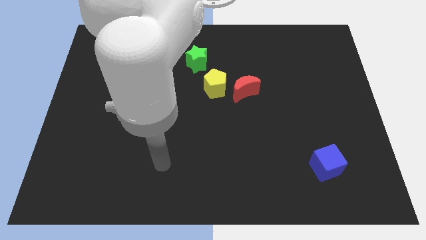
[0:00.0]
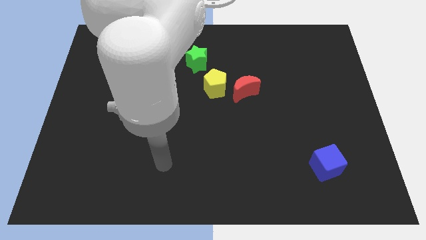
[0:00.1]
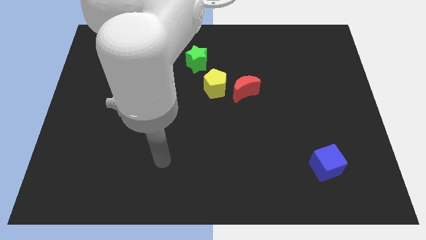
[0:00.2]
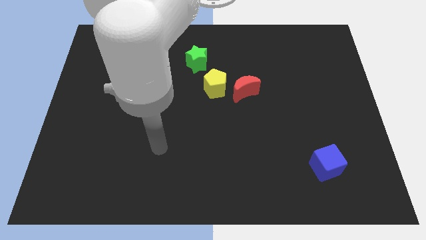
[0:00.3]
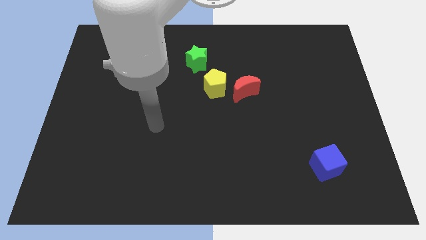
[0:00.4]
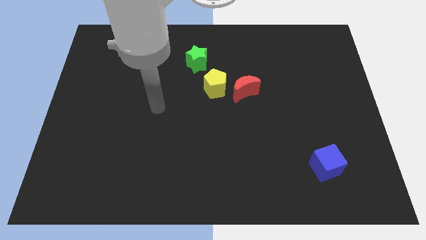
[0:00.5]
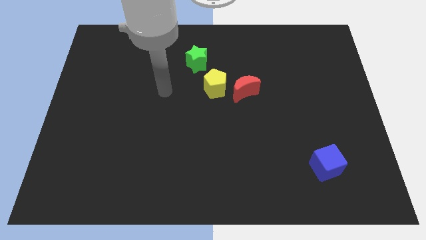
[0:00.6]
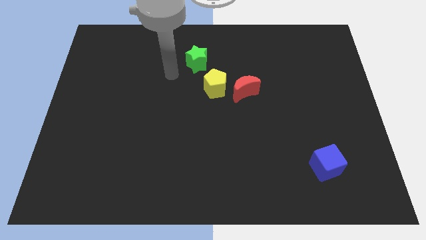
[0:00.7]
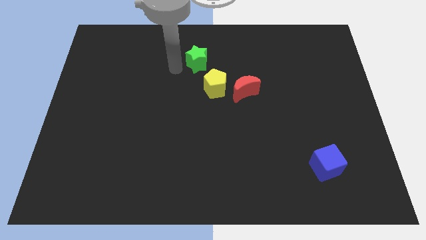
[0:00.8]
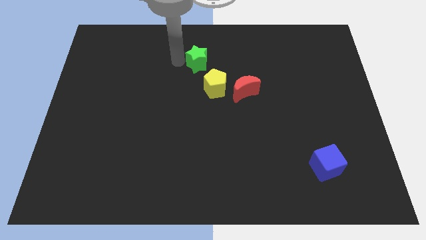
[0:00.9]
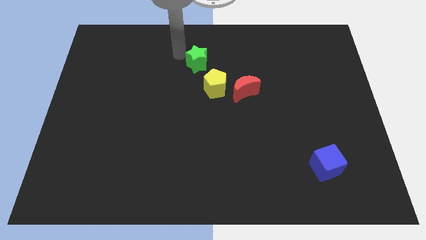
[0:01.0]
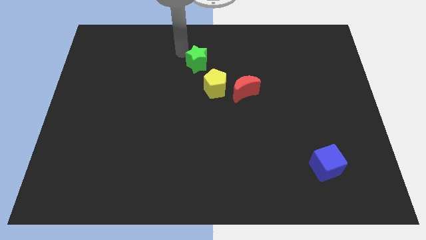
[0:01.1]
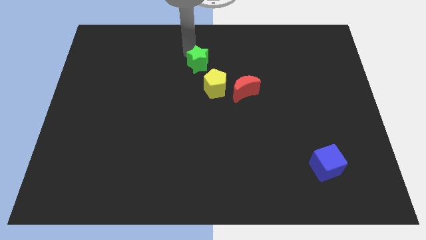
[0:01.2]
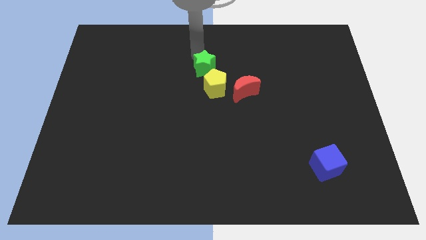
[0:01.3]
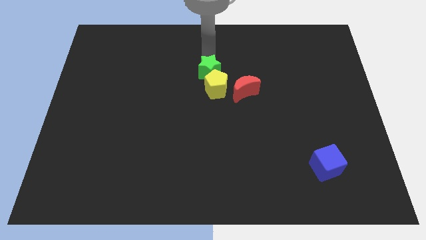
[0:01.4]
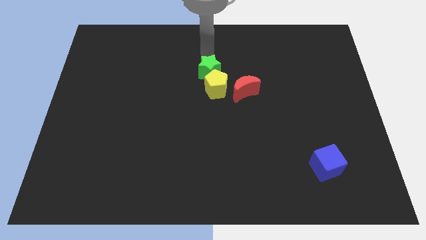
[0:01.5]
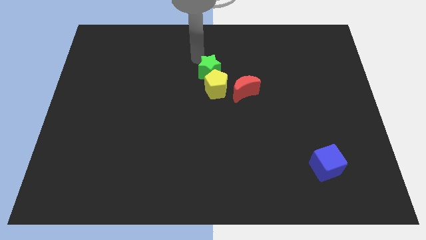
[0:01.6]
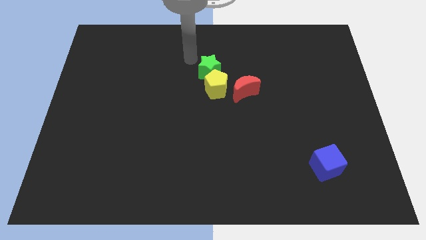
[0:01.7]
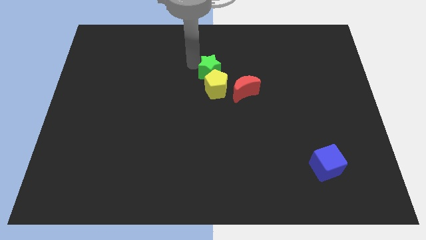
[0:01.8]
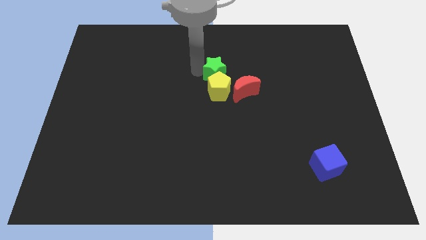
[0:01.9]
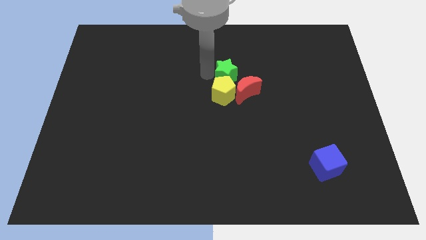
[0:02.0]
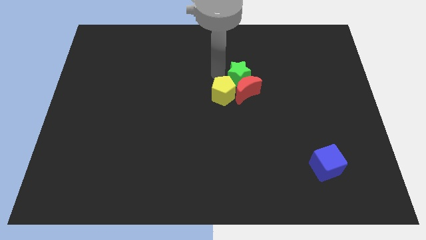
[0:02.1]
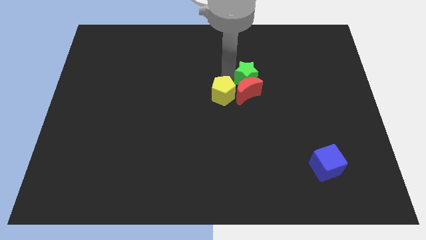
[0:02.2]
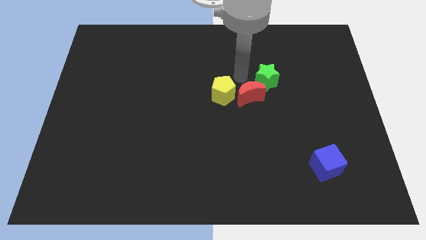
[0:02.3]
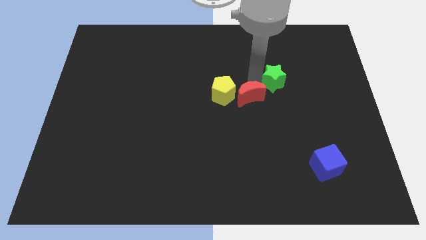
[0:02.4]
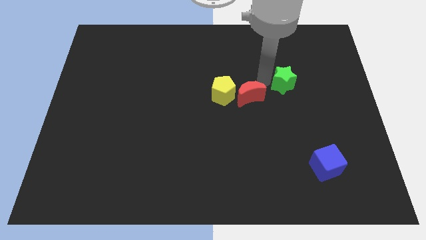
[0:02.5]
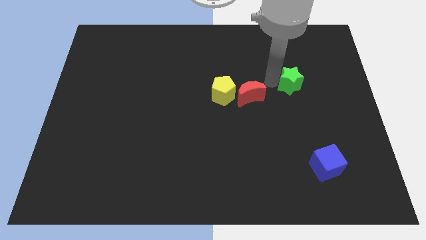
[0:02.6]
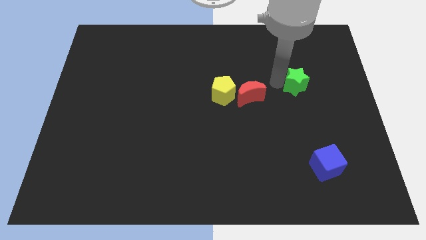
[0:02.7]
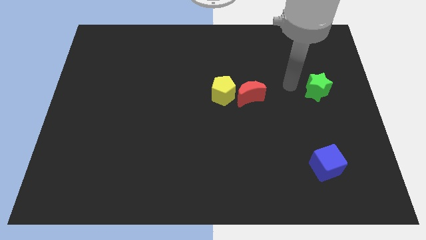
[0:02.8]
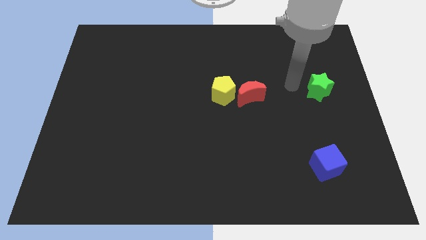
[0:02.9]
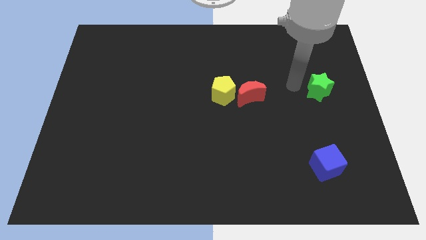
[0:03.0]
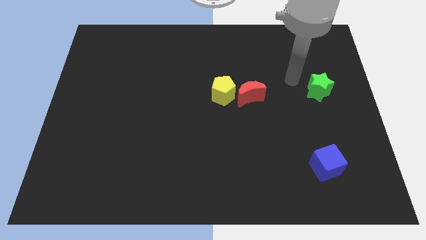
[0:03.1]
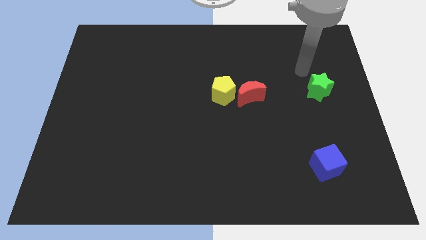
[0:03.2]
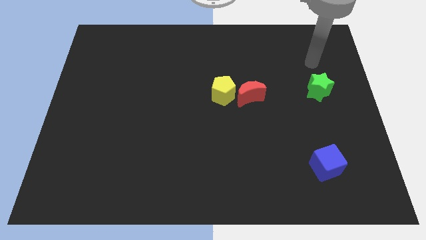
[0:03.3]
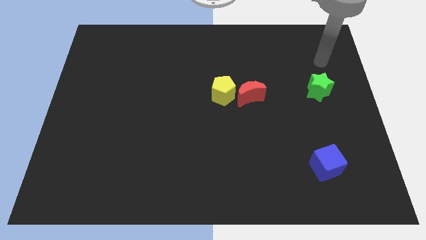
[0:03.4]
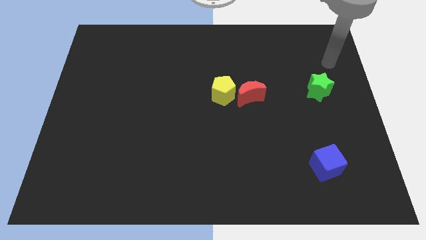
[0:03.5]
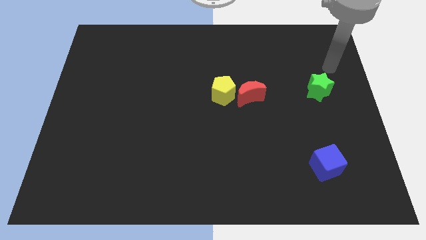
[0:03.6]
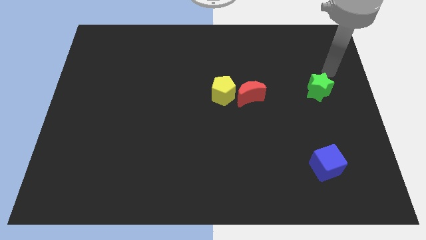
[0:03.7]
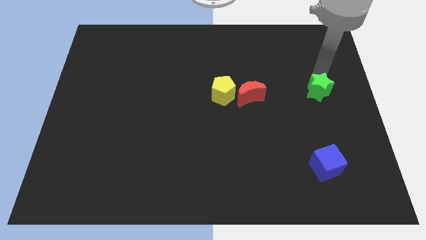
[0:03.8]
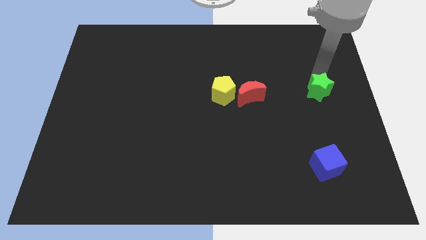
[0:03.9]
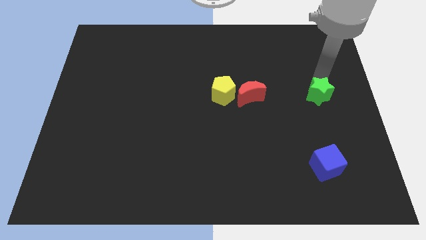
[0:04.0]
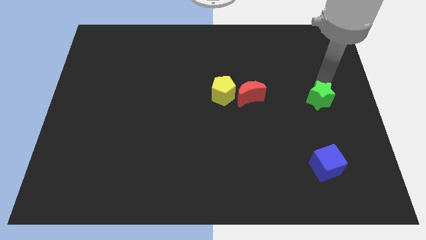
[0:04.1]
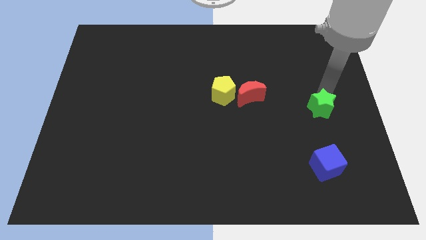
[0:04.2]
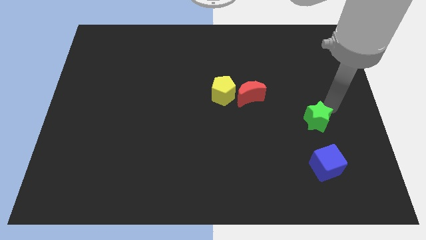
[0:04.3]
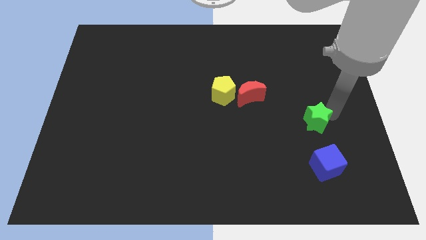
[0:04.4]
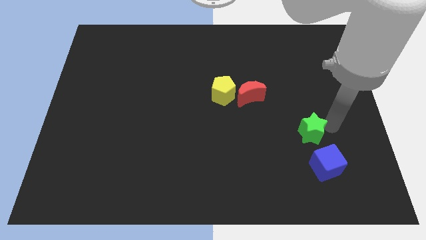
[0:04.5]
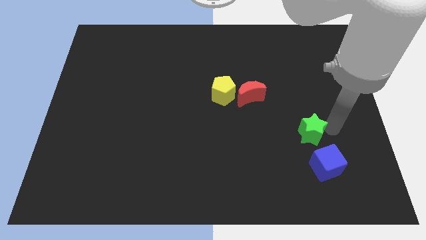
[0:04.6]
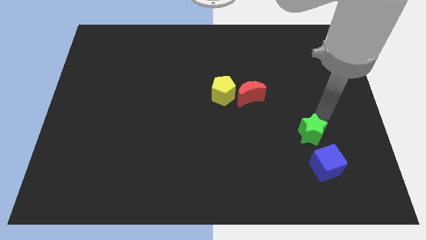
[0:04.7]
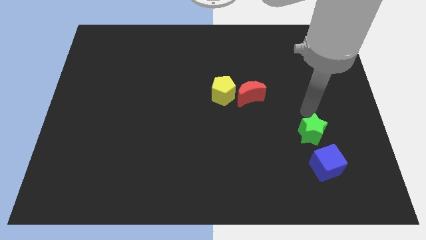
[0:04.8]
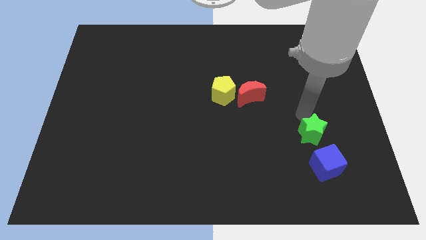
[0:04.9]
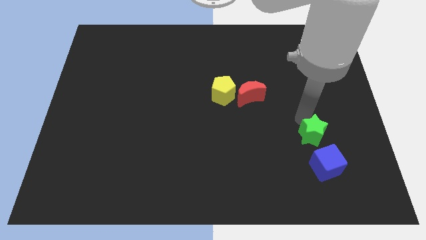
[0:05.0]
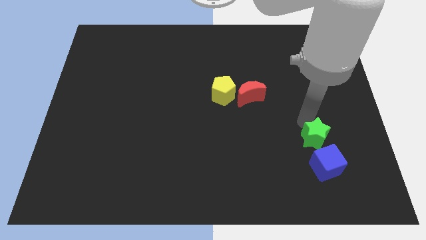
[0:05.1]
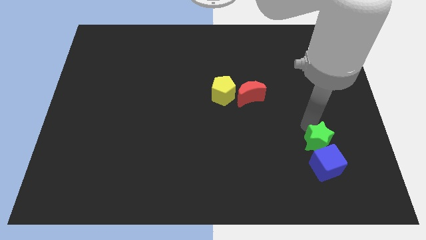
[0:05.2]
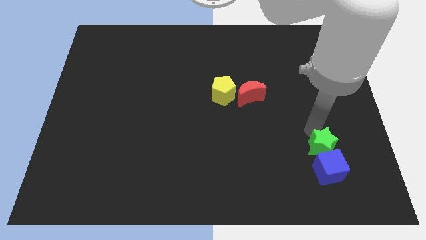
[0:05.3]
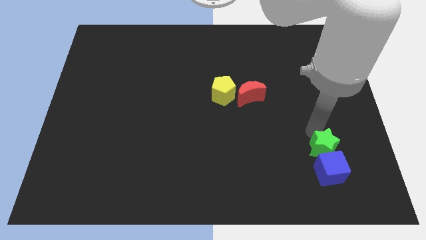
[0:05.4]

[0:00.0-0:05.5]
slide the star towards the cube

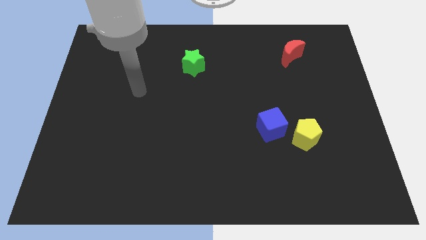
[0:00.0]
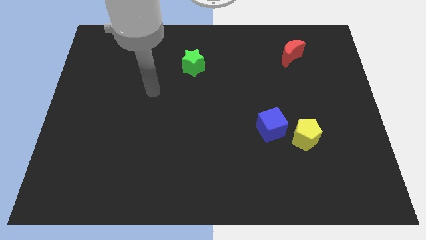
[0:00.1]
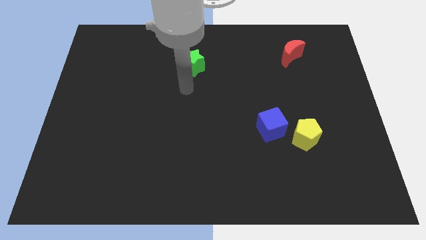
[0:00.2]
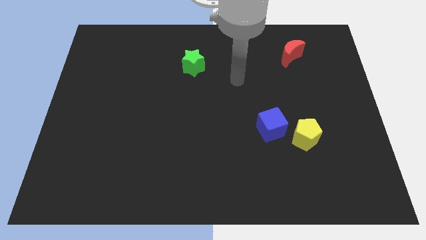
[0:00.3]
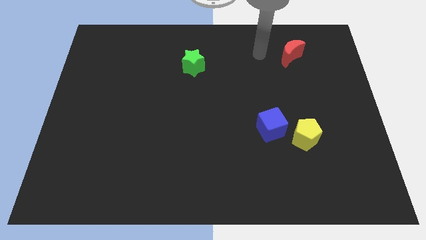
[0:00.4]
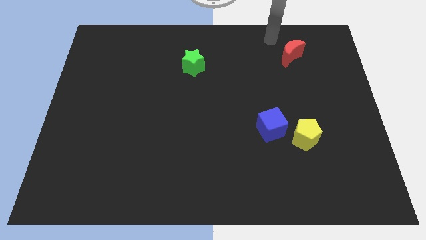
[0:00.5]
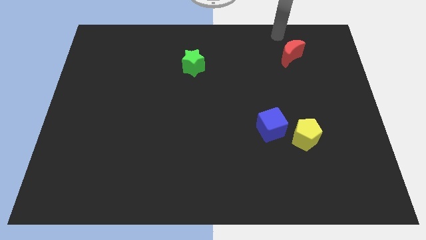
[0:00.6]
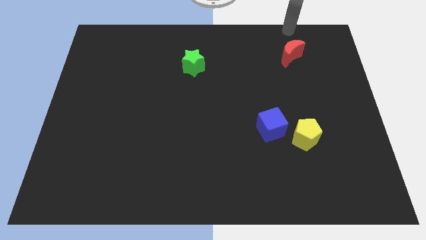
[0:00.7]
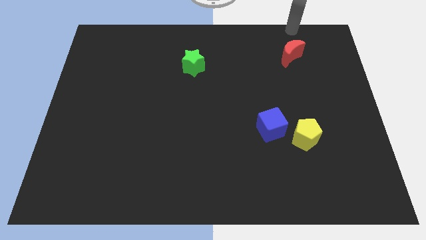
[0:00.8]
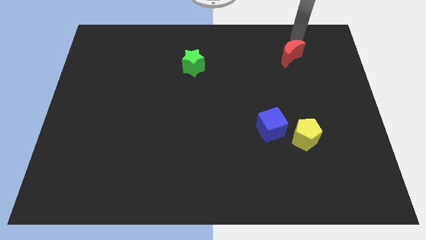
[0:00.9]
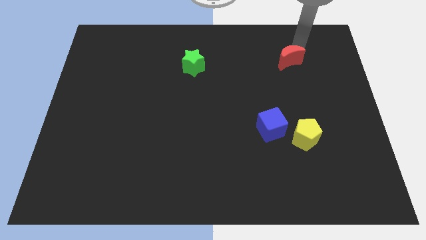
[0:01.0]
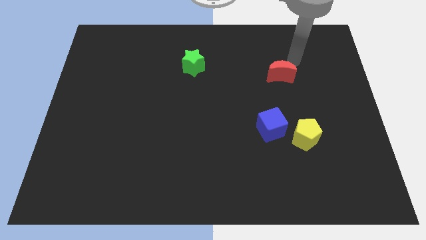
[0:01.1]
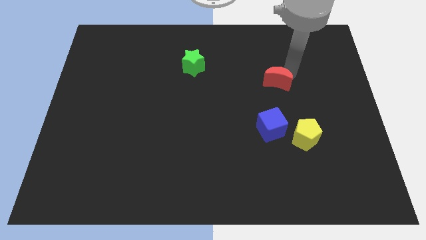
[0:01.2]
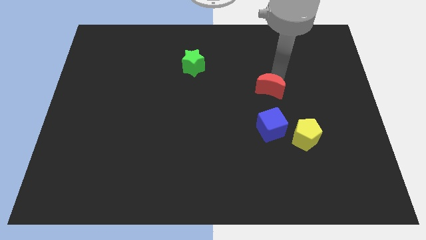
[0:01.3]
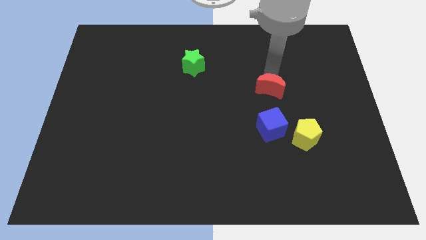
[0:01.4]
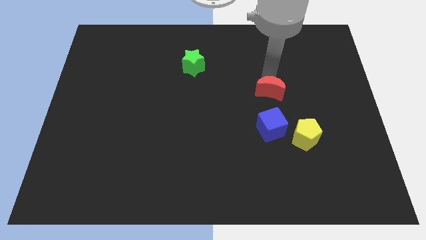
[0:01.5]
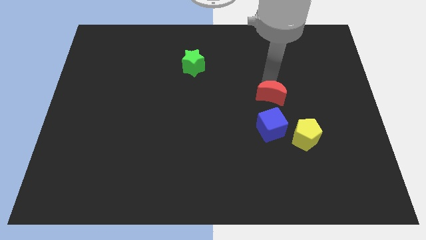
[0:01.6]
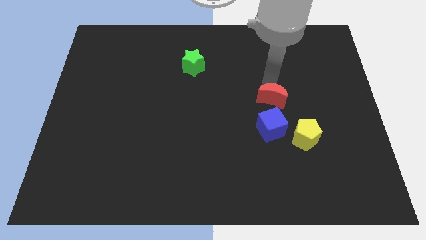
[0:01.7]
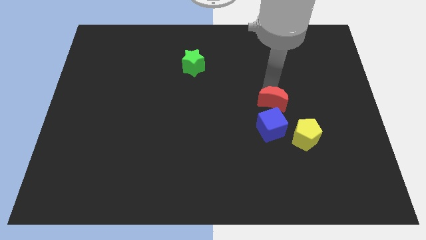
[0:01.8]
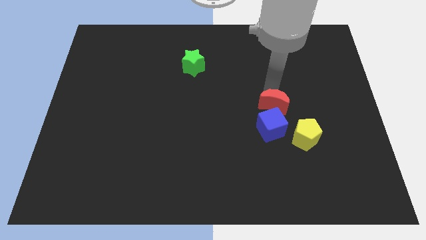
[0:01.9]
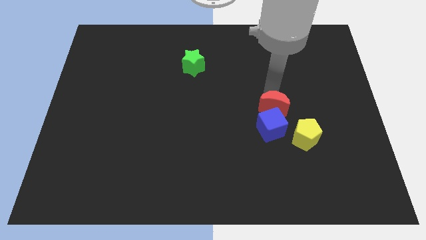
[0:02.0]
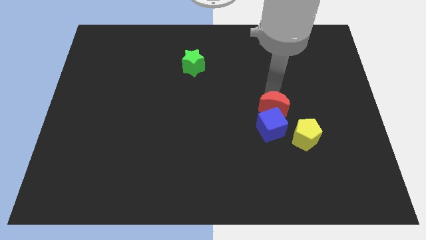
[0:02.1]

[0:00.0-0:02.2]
move the moon to the blue block

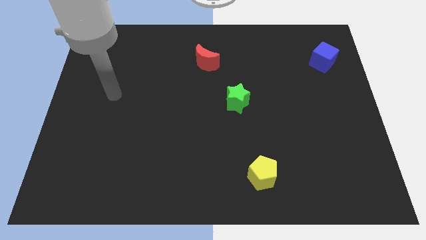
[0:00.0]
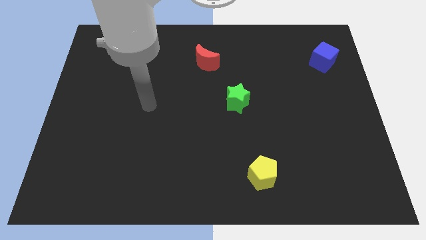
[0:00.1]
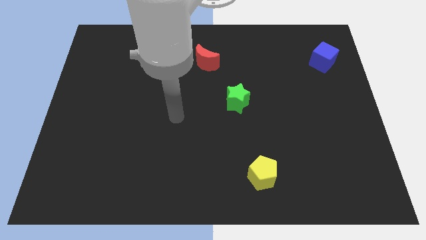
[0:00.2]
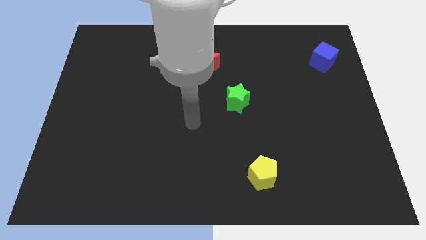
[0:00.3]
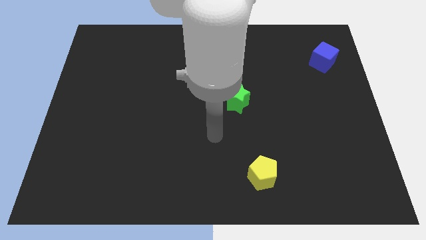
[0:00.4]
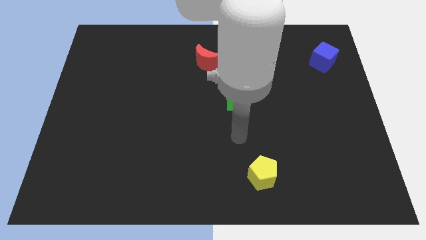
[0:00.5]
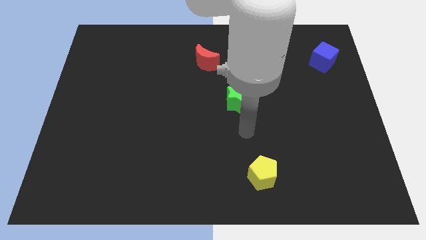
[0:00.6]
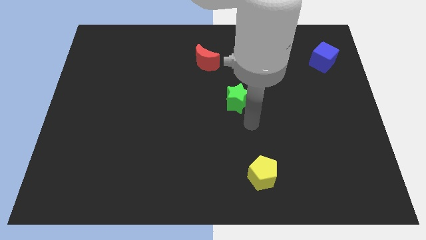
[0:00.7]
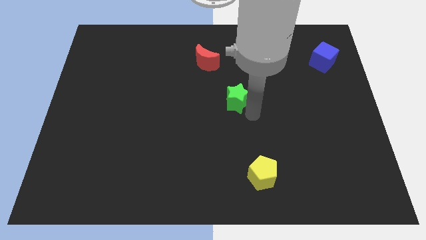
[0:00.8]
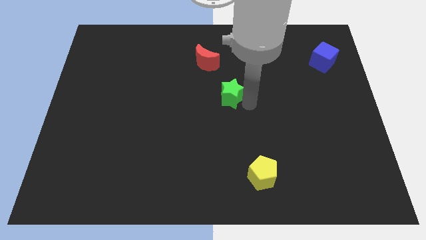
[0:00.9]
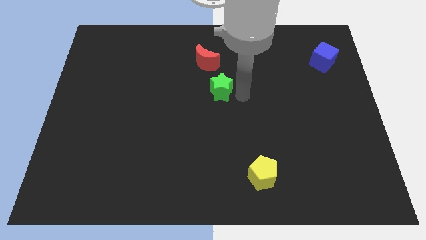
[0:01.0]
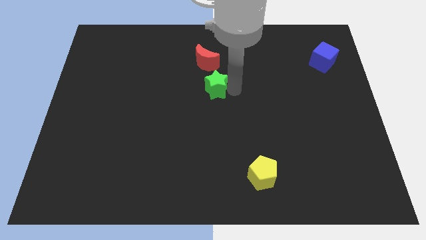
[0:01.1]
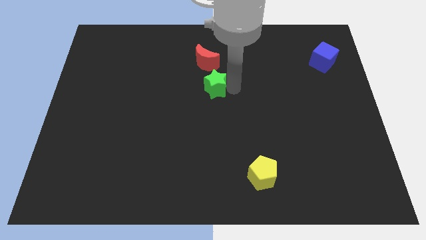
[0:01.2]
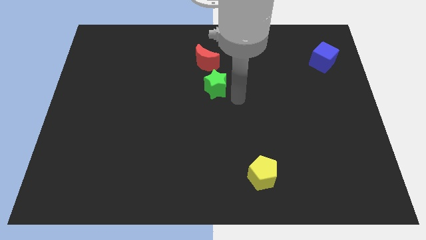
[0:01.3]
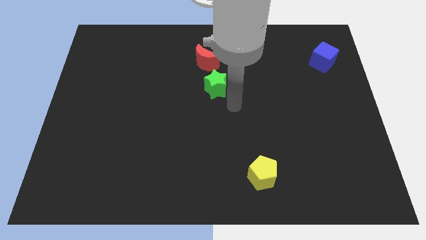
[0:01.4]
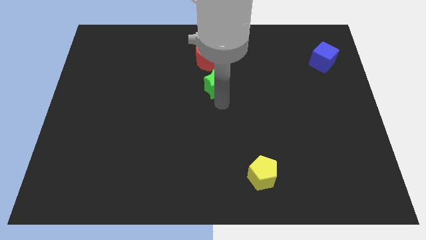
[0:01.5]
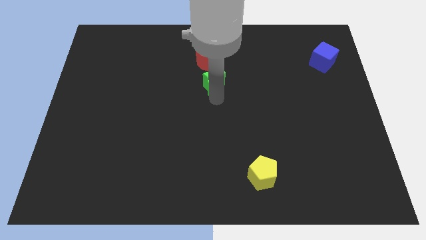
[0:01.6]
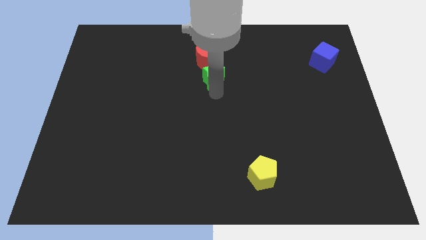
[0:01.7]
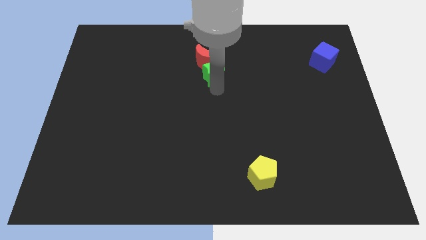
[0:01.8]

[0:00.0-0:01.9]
slide the green block close to the red moon
